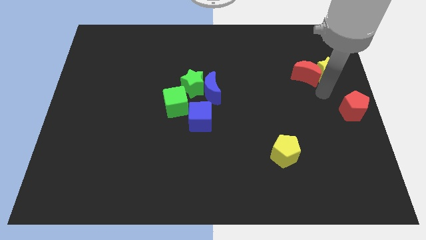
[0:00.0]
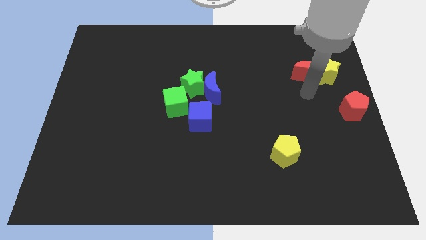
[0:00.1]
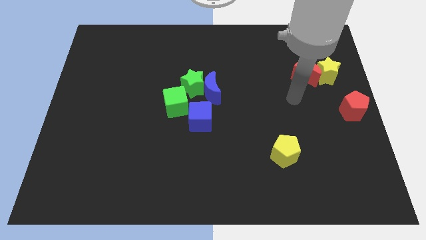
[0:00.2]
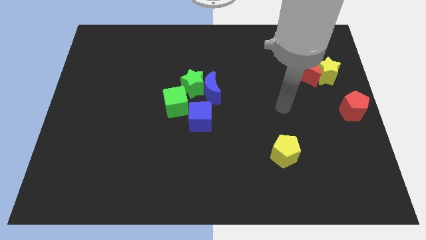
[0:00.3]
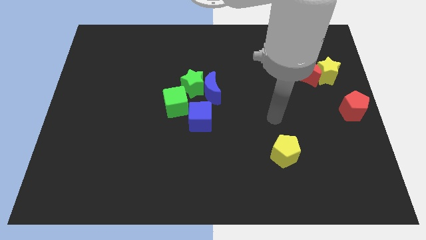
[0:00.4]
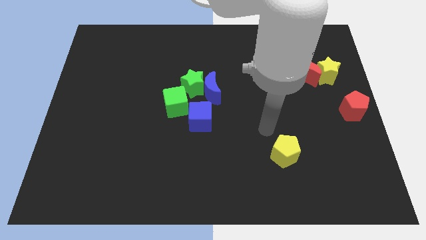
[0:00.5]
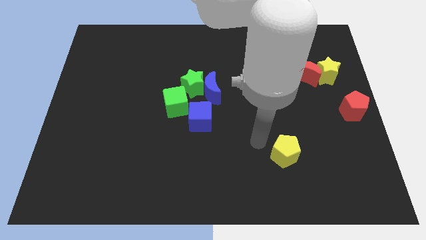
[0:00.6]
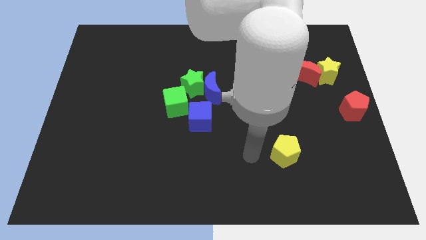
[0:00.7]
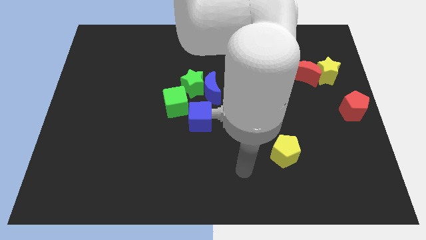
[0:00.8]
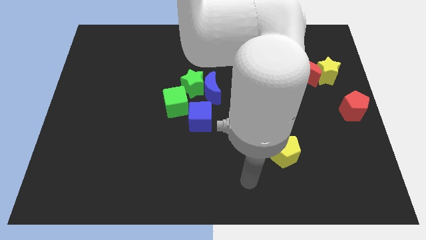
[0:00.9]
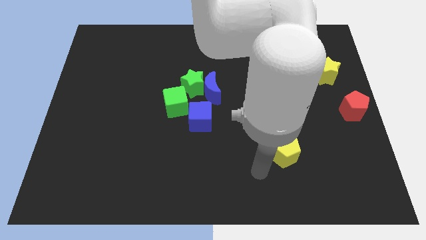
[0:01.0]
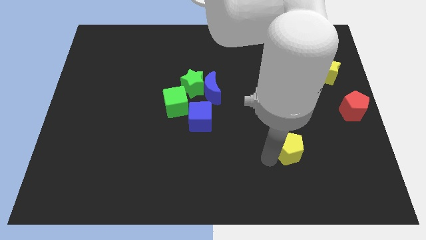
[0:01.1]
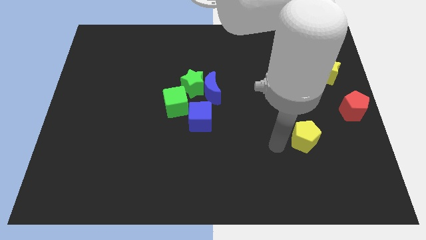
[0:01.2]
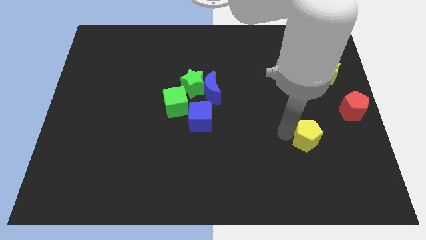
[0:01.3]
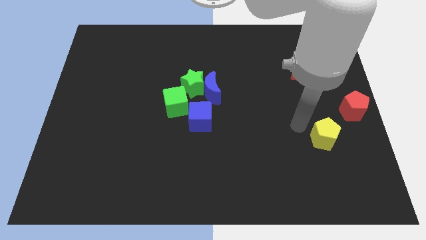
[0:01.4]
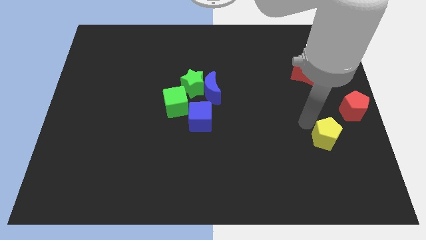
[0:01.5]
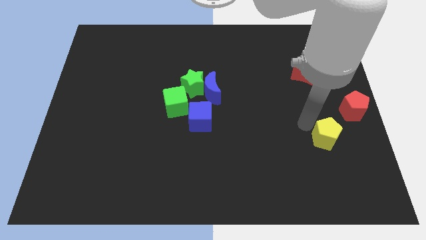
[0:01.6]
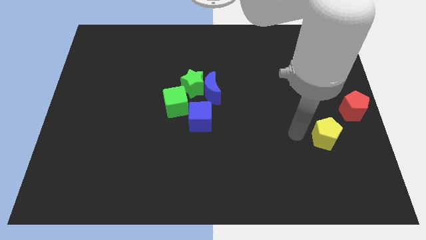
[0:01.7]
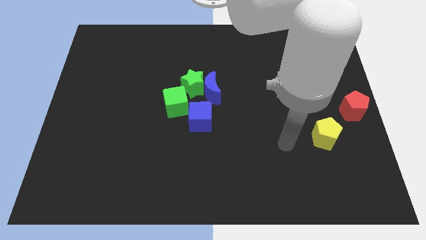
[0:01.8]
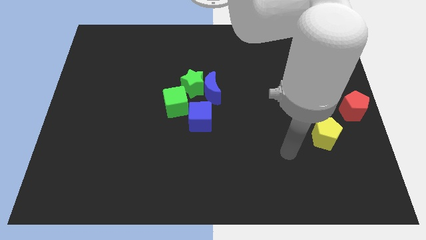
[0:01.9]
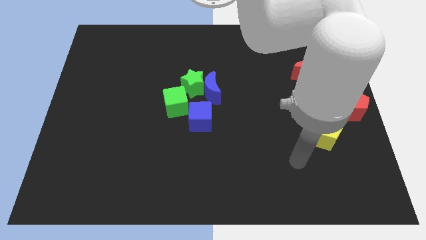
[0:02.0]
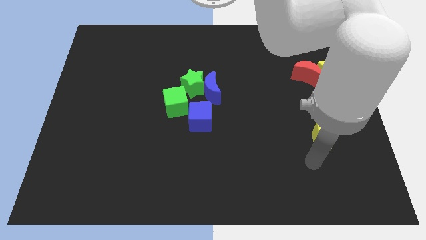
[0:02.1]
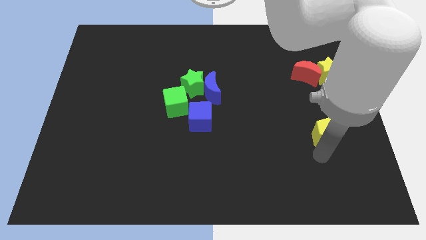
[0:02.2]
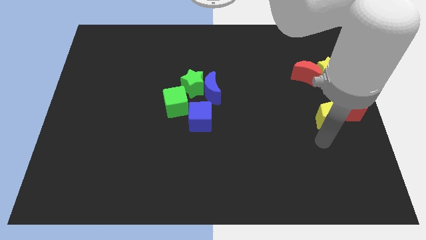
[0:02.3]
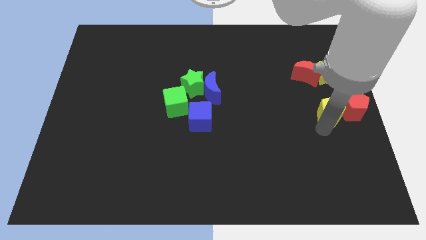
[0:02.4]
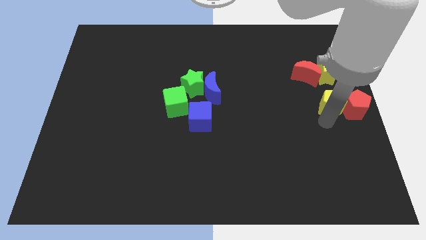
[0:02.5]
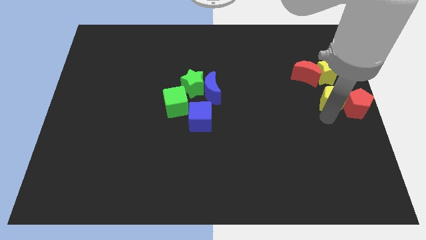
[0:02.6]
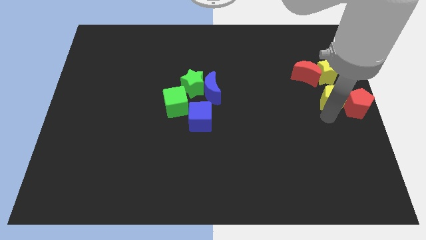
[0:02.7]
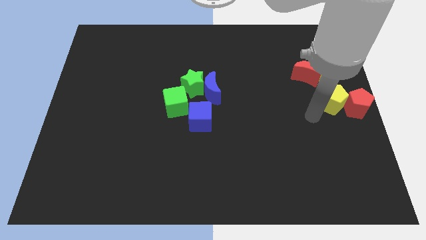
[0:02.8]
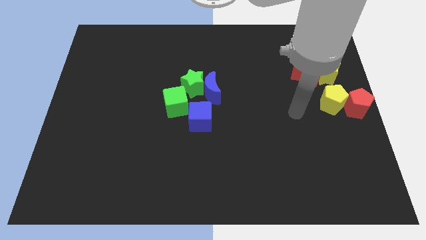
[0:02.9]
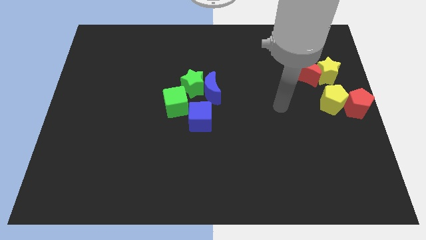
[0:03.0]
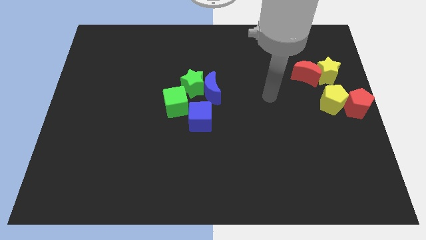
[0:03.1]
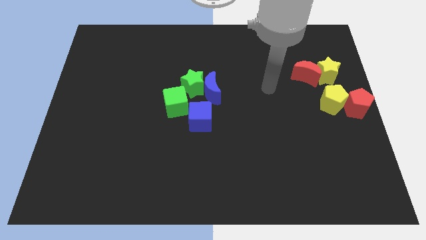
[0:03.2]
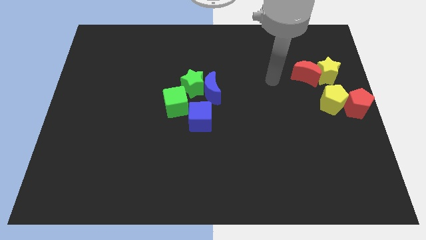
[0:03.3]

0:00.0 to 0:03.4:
push the yellow pentagon into red pentagon

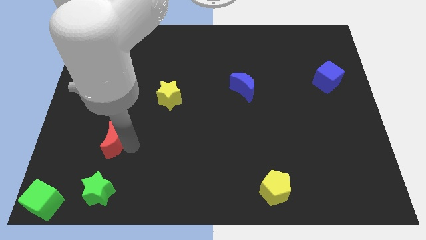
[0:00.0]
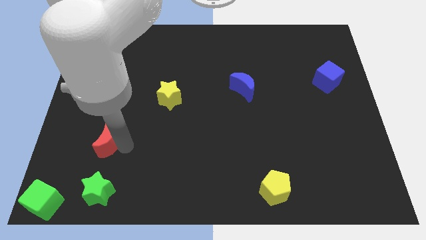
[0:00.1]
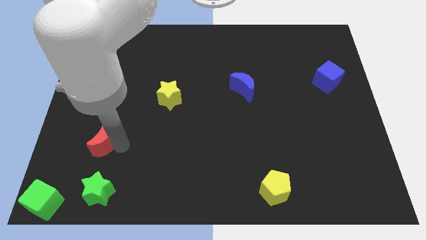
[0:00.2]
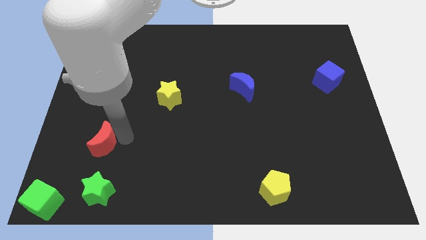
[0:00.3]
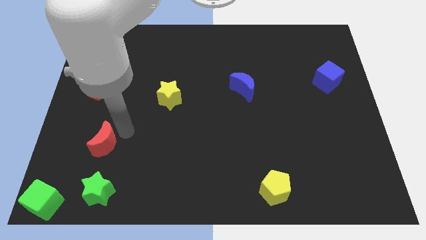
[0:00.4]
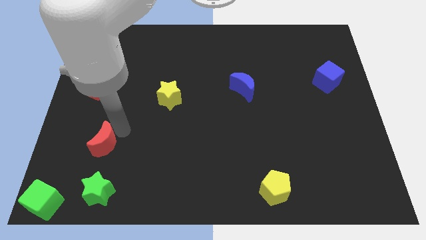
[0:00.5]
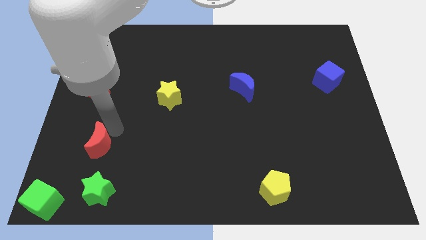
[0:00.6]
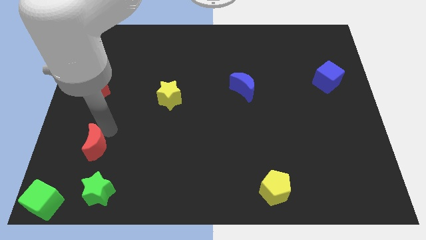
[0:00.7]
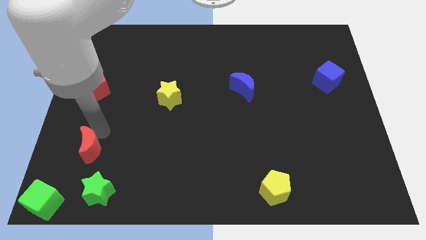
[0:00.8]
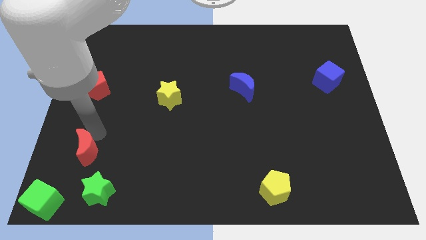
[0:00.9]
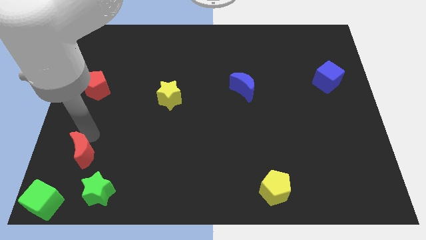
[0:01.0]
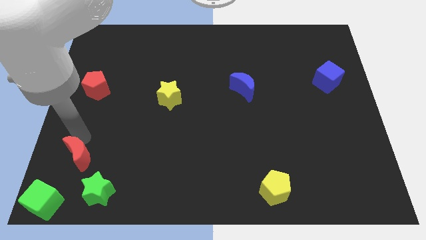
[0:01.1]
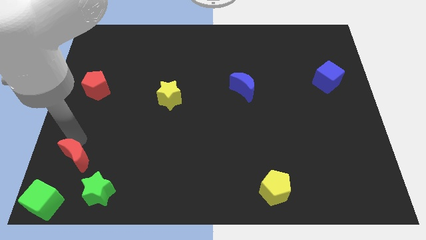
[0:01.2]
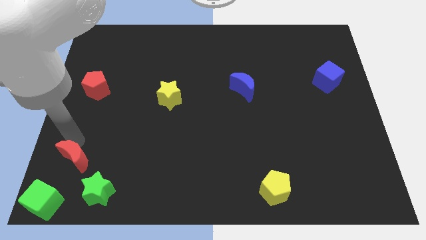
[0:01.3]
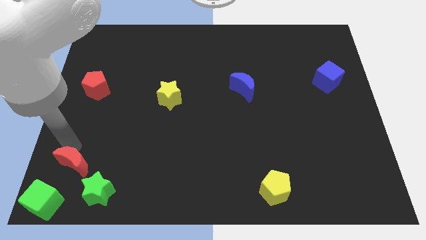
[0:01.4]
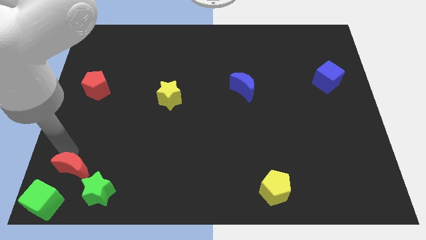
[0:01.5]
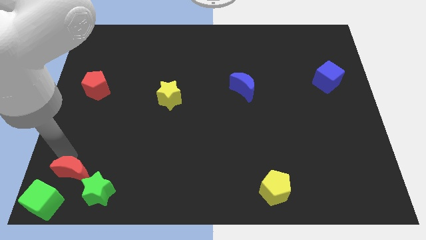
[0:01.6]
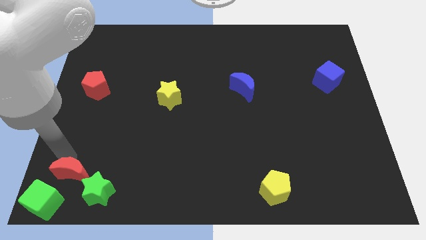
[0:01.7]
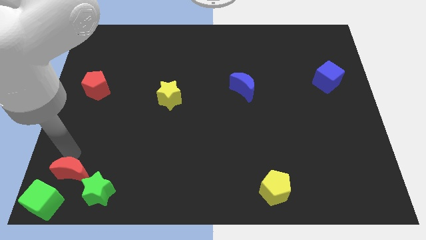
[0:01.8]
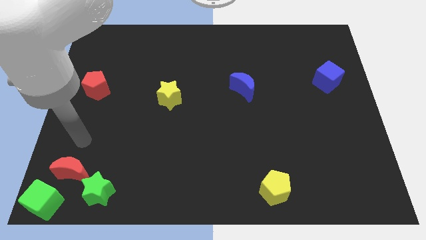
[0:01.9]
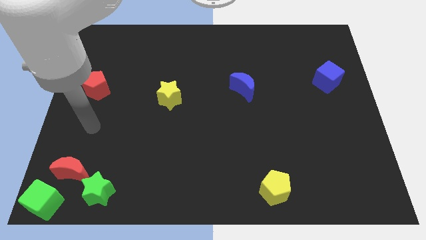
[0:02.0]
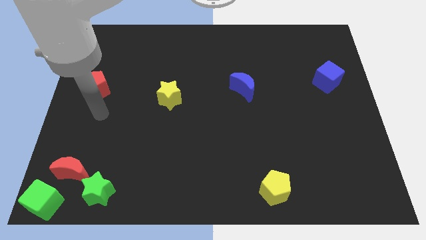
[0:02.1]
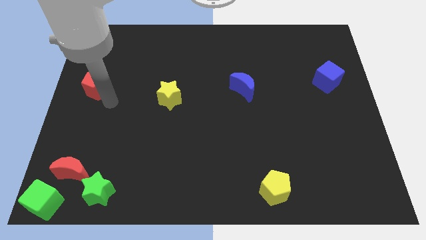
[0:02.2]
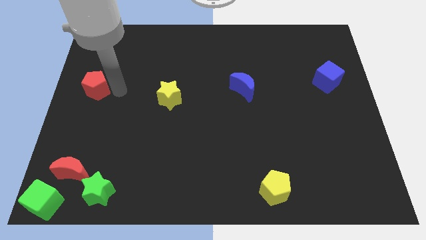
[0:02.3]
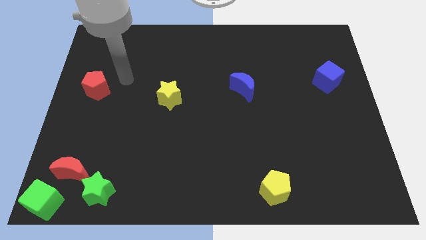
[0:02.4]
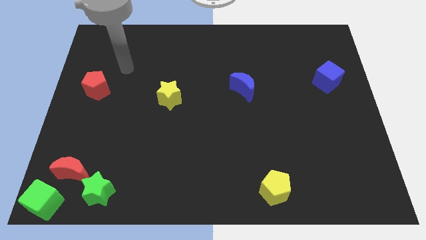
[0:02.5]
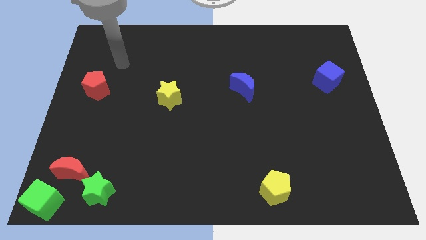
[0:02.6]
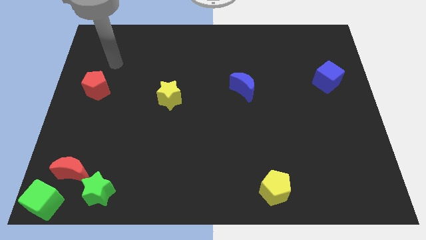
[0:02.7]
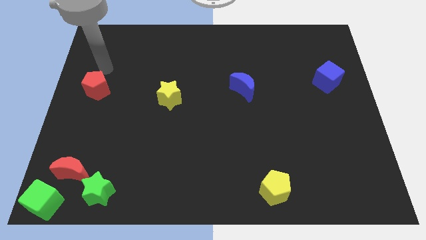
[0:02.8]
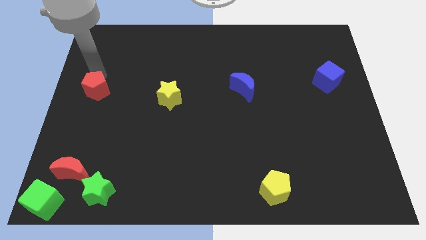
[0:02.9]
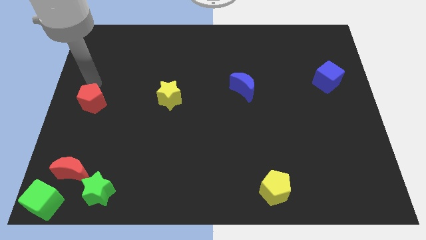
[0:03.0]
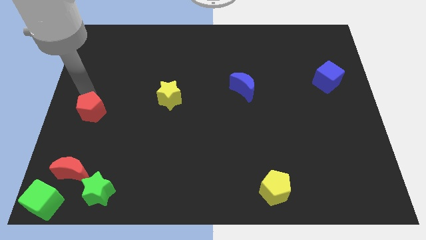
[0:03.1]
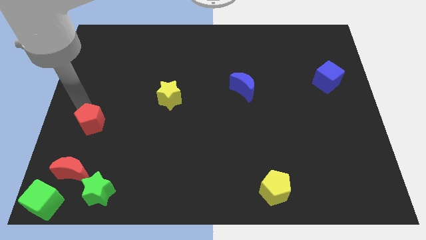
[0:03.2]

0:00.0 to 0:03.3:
push red pentagon slightly downwards

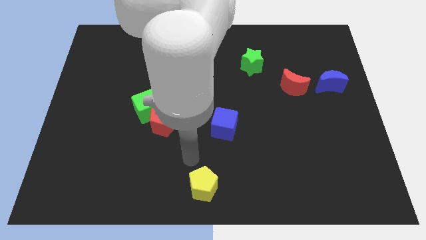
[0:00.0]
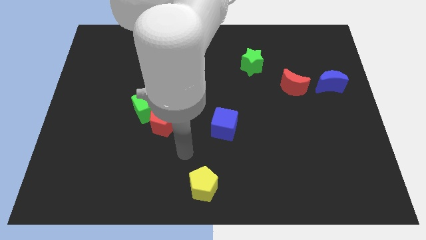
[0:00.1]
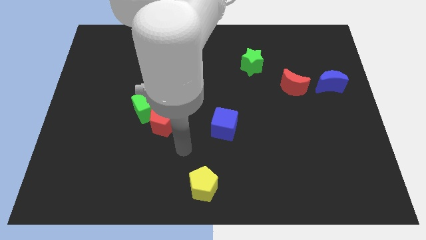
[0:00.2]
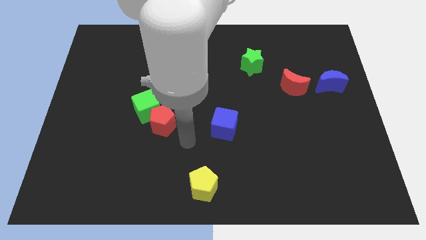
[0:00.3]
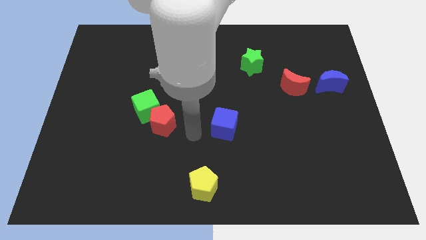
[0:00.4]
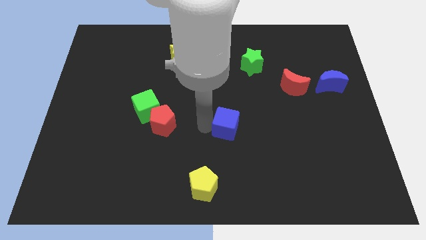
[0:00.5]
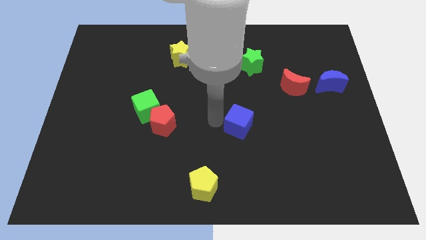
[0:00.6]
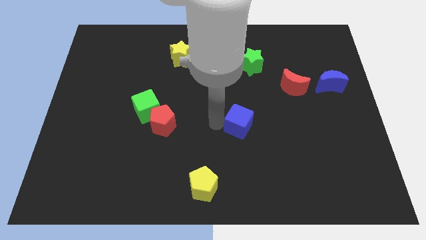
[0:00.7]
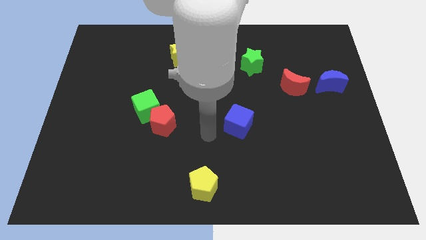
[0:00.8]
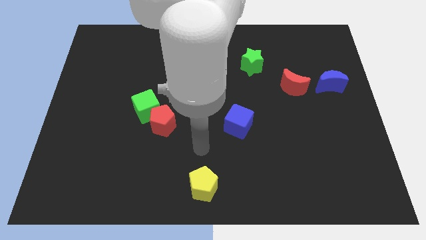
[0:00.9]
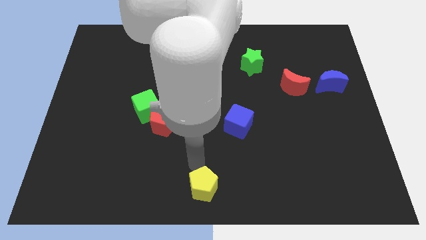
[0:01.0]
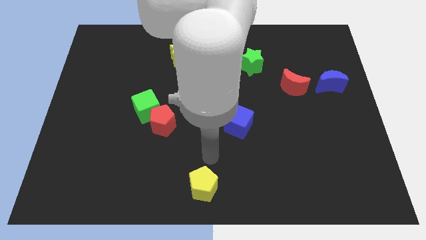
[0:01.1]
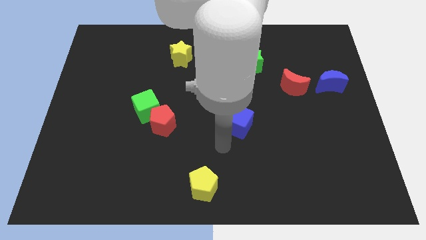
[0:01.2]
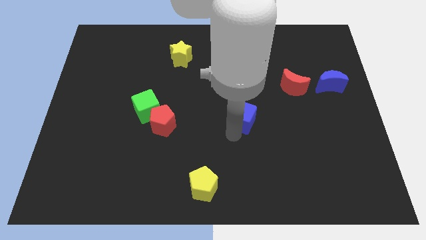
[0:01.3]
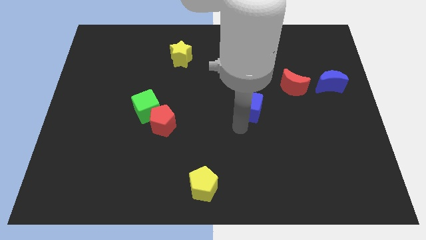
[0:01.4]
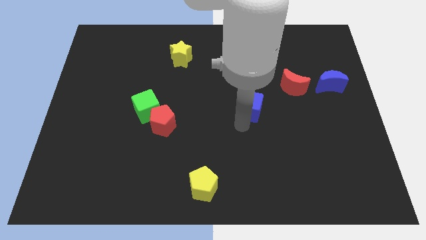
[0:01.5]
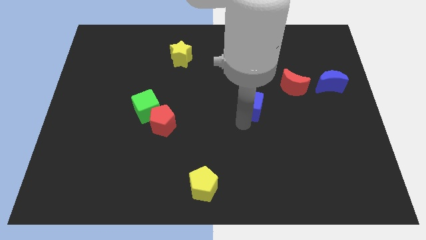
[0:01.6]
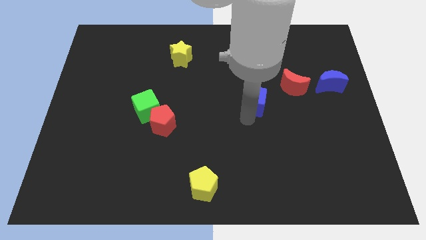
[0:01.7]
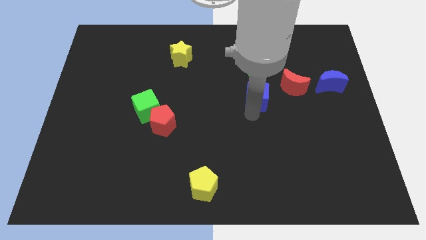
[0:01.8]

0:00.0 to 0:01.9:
push the blue cube towards red crescent

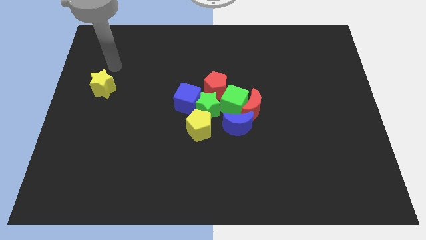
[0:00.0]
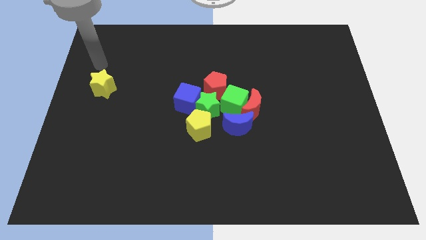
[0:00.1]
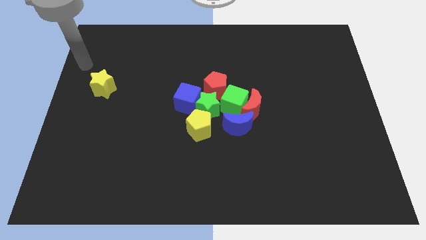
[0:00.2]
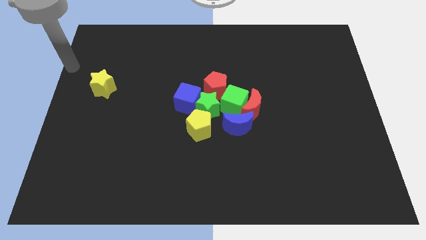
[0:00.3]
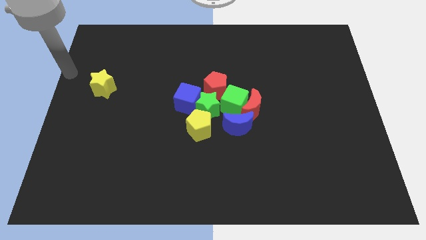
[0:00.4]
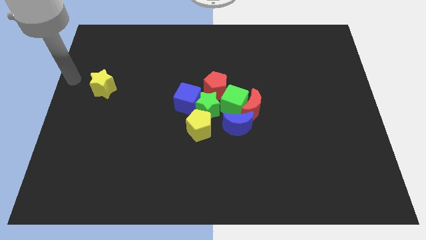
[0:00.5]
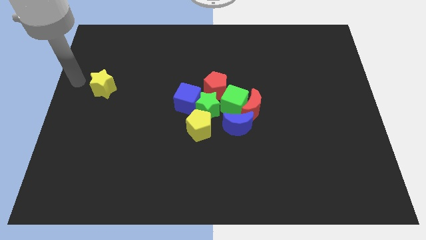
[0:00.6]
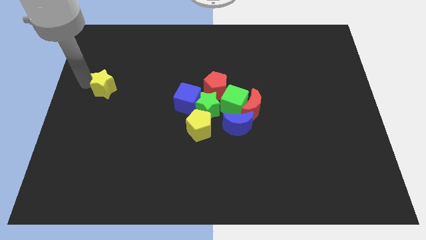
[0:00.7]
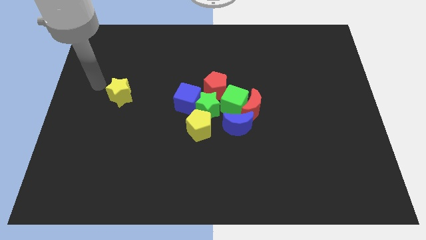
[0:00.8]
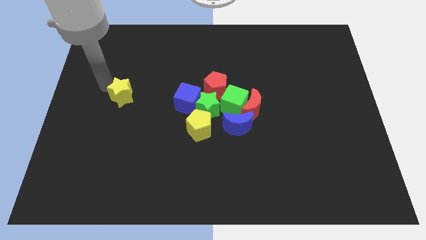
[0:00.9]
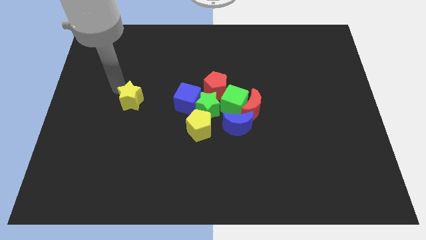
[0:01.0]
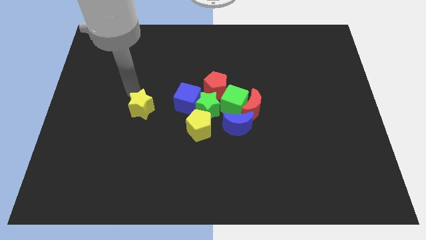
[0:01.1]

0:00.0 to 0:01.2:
move the yellow star towards the center
